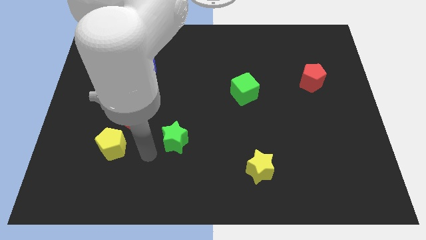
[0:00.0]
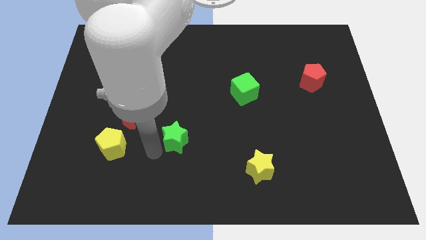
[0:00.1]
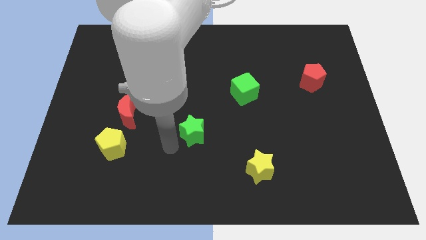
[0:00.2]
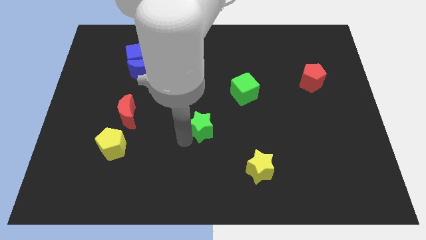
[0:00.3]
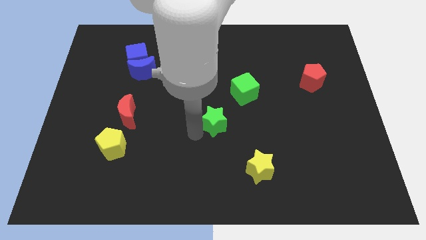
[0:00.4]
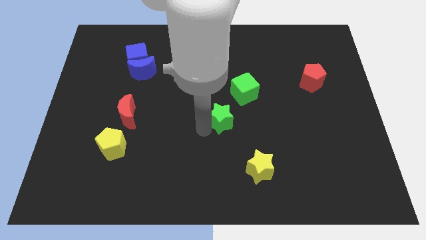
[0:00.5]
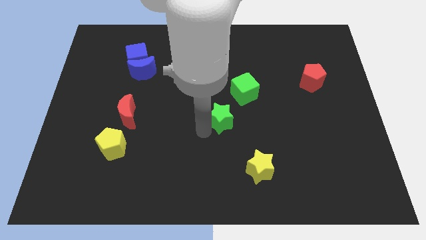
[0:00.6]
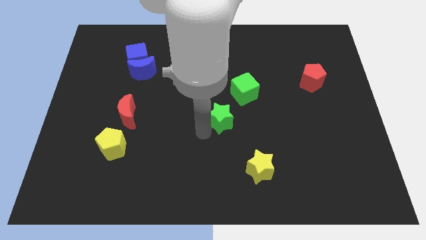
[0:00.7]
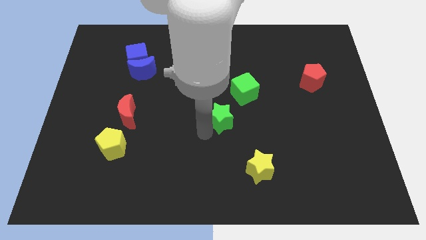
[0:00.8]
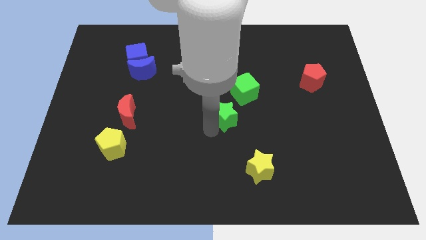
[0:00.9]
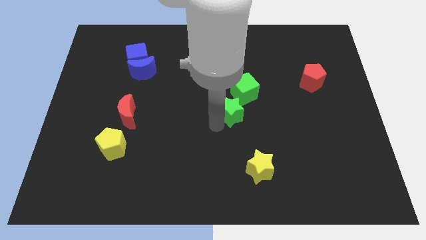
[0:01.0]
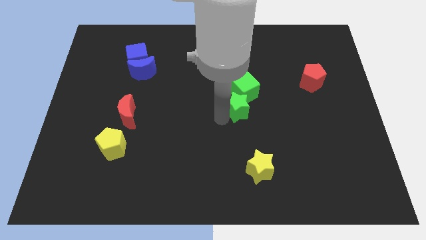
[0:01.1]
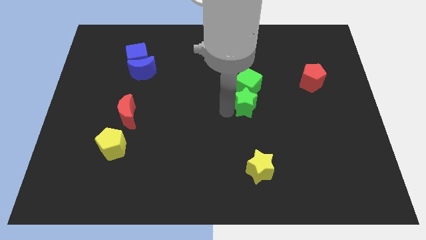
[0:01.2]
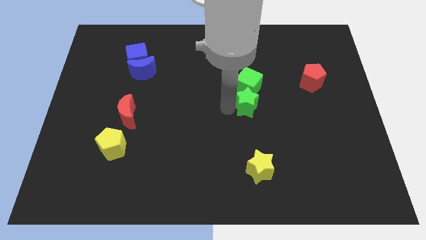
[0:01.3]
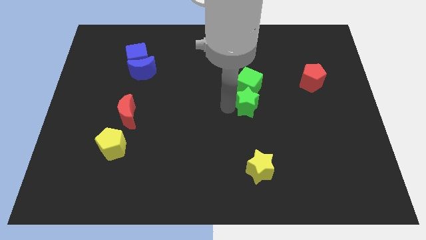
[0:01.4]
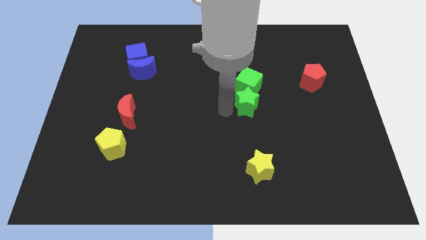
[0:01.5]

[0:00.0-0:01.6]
push the green star to the bottom of the green cube

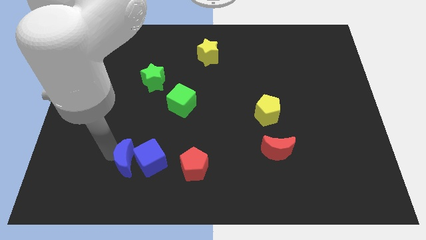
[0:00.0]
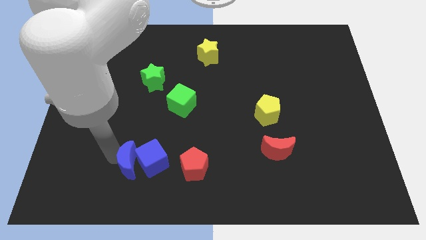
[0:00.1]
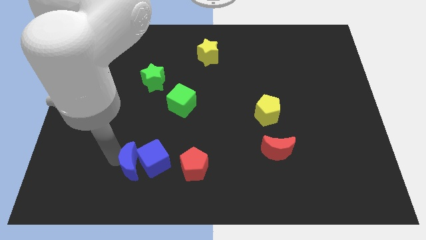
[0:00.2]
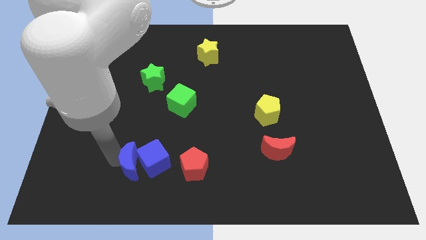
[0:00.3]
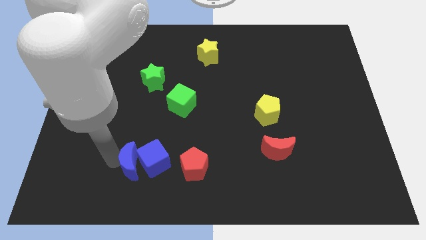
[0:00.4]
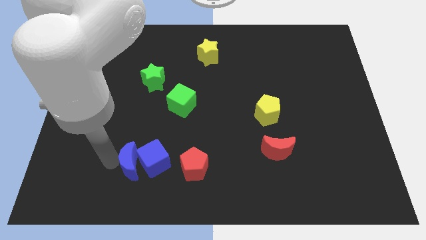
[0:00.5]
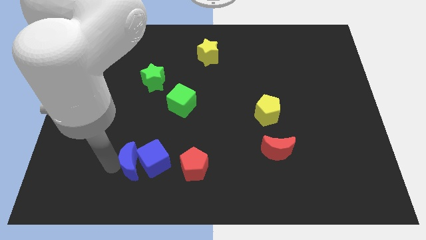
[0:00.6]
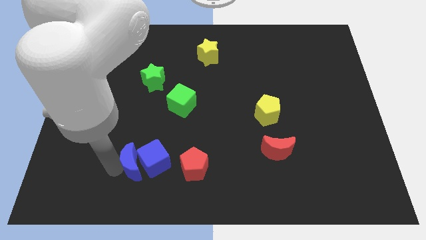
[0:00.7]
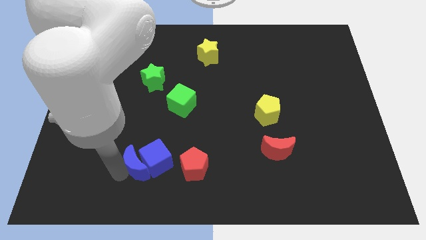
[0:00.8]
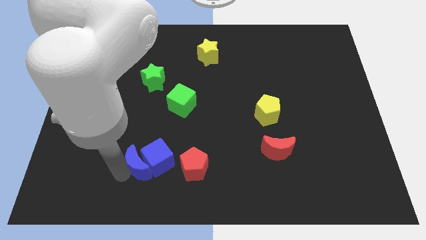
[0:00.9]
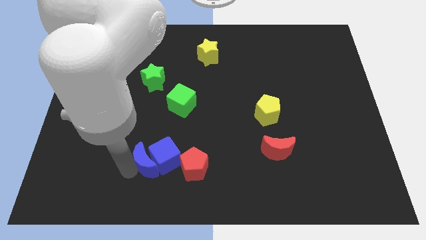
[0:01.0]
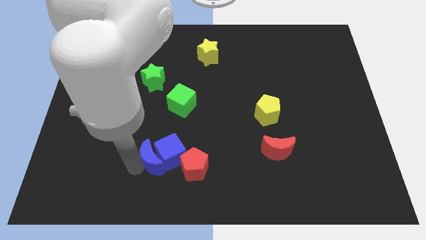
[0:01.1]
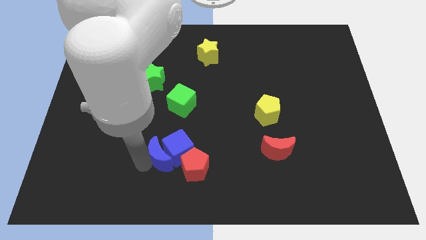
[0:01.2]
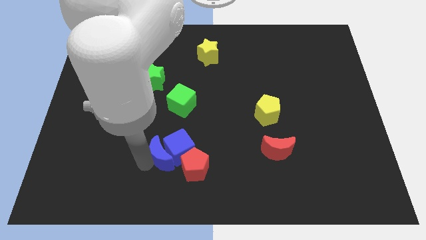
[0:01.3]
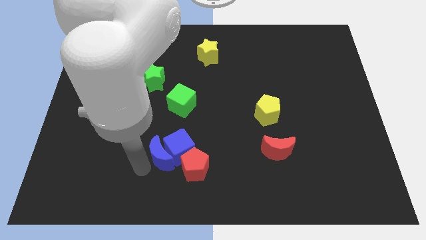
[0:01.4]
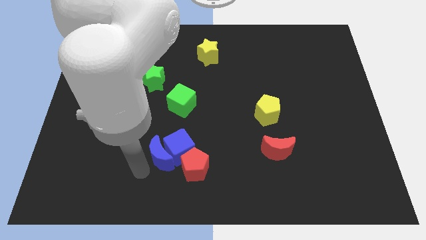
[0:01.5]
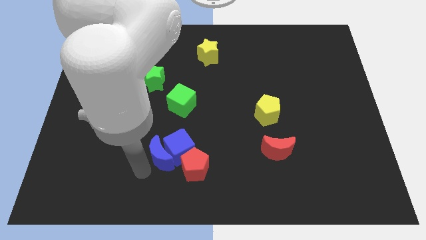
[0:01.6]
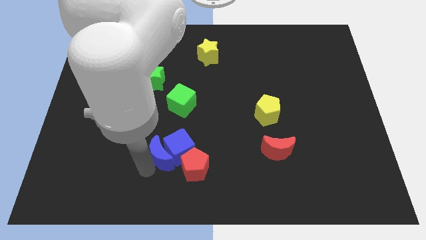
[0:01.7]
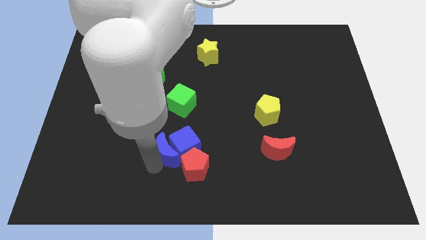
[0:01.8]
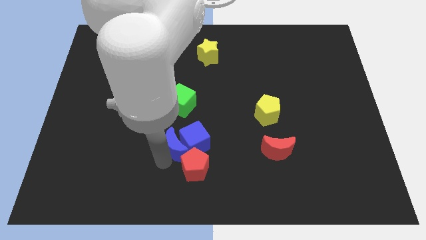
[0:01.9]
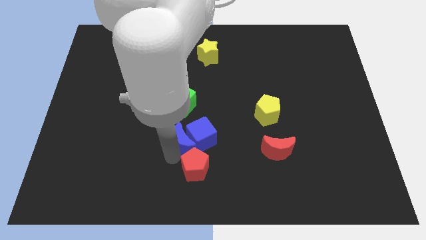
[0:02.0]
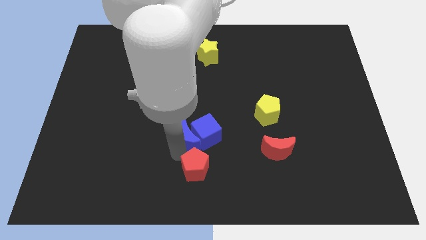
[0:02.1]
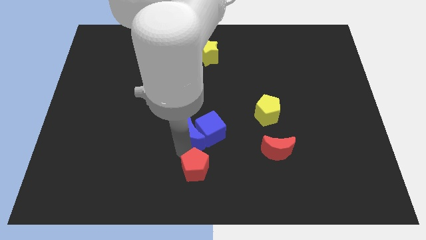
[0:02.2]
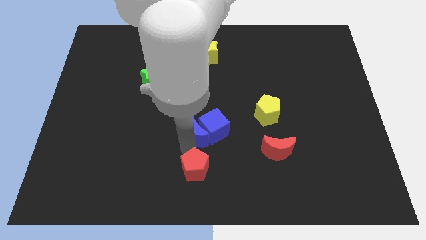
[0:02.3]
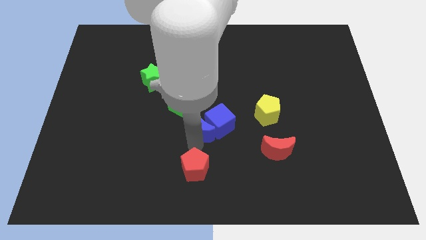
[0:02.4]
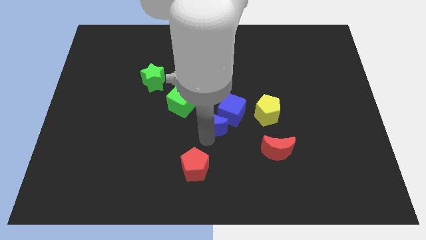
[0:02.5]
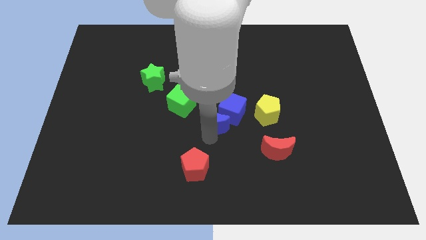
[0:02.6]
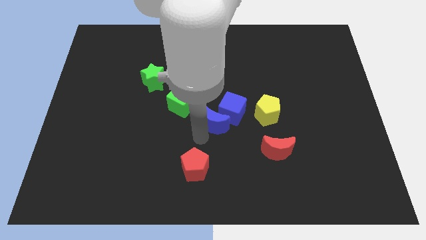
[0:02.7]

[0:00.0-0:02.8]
place the group of blue blocks between the green cube and yellow pentagon

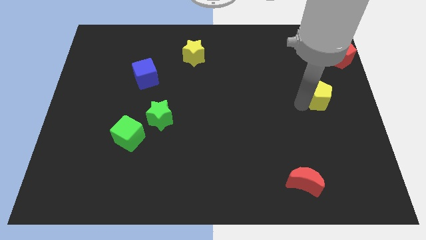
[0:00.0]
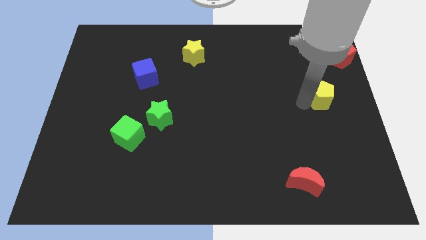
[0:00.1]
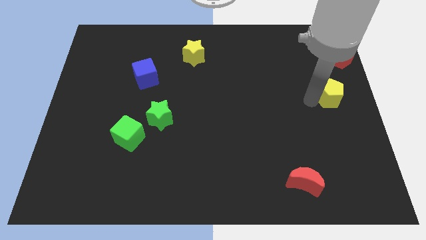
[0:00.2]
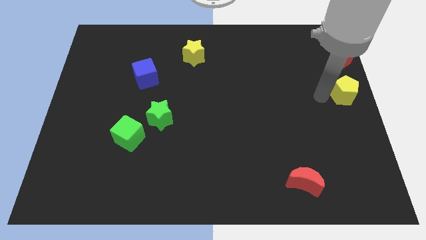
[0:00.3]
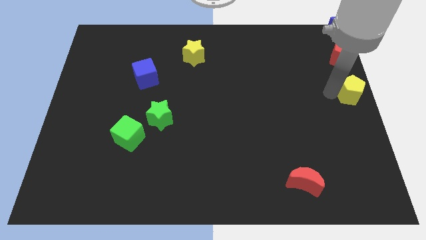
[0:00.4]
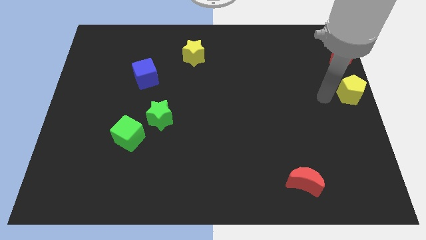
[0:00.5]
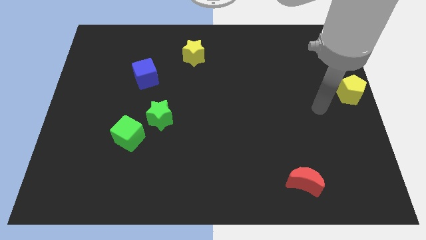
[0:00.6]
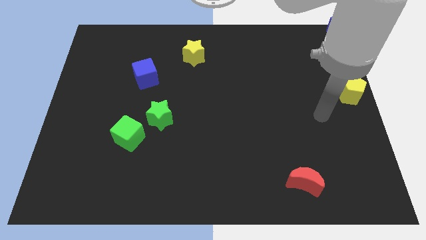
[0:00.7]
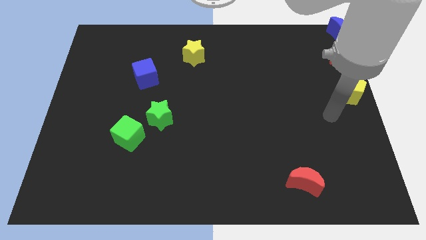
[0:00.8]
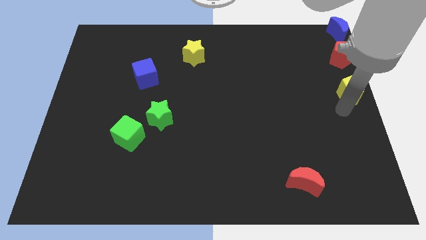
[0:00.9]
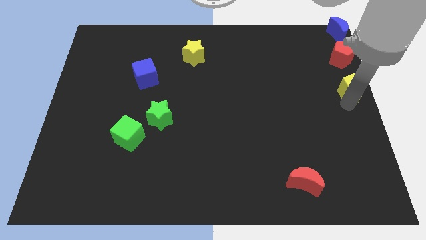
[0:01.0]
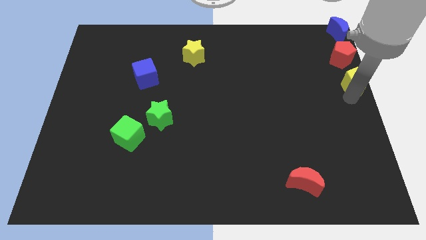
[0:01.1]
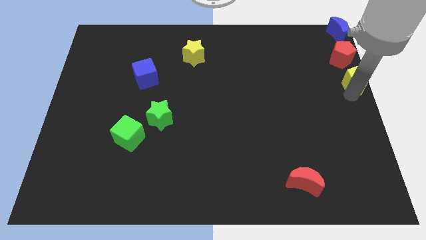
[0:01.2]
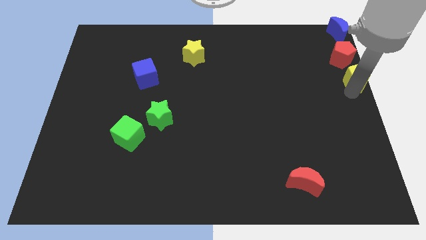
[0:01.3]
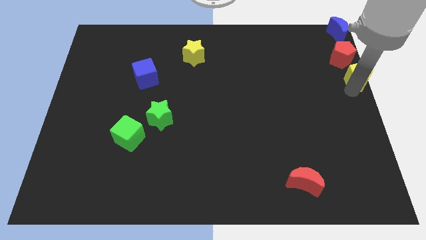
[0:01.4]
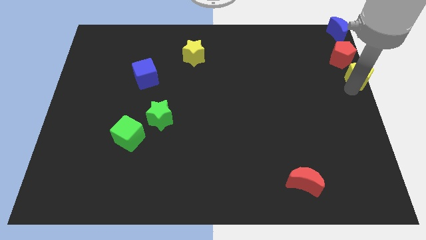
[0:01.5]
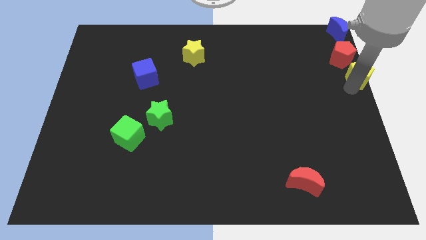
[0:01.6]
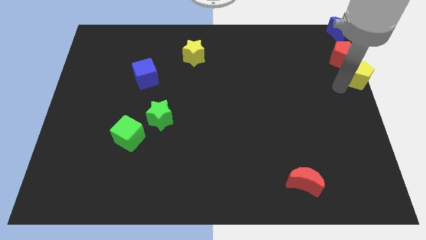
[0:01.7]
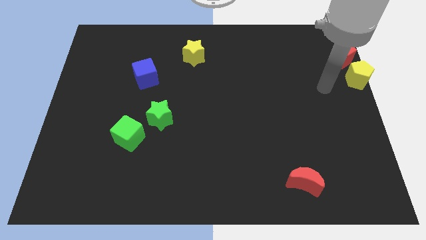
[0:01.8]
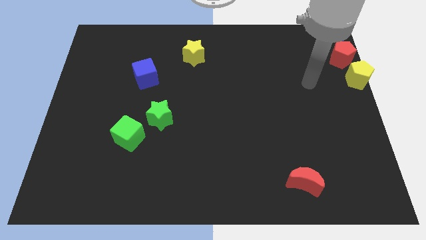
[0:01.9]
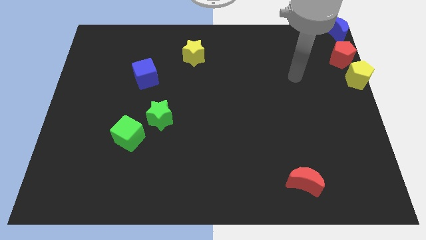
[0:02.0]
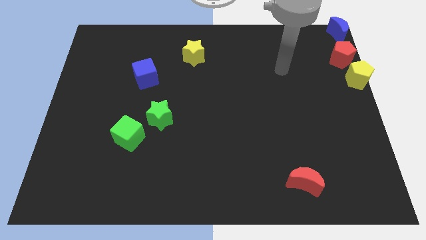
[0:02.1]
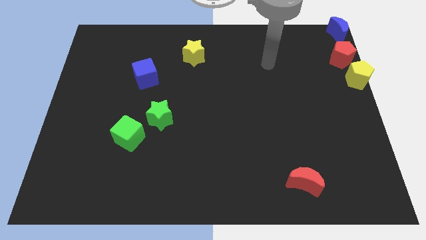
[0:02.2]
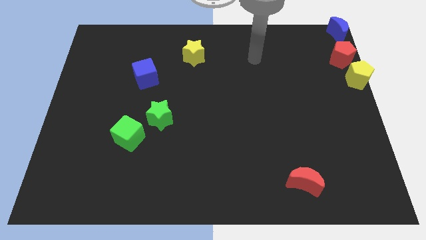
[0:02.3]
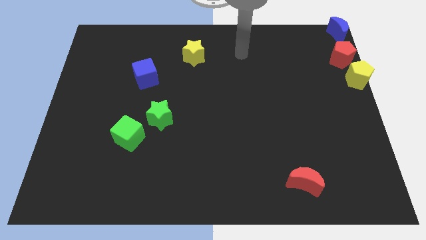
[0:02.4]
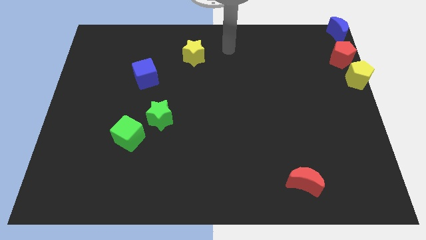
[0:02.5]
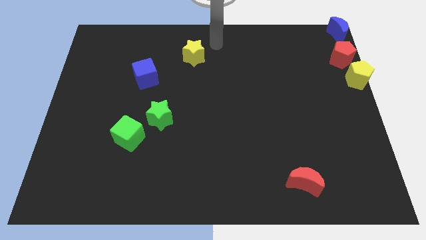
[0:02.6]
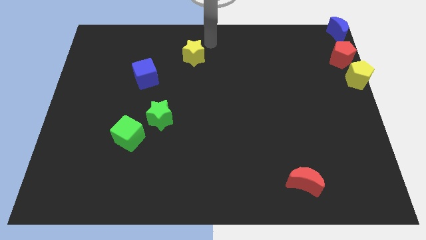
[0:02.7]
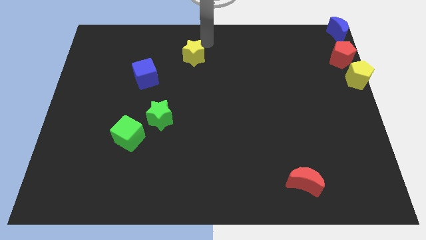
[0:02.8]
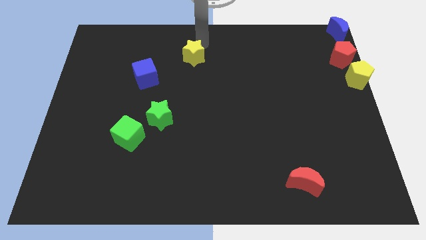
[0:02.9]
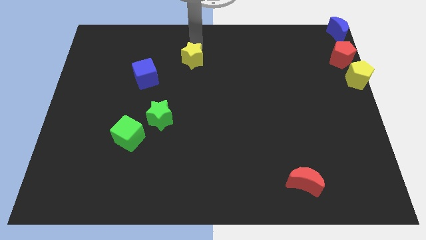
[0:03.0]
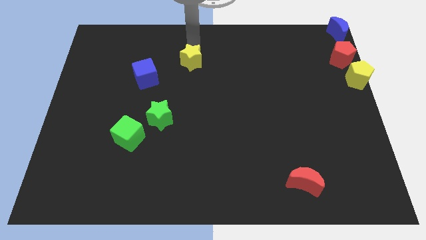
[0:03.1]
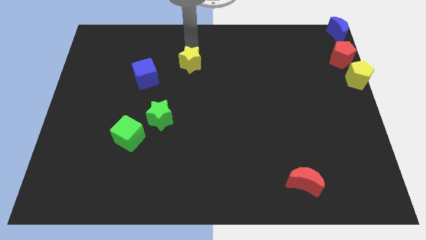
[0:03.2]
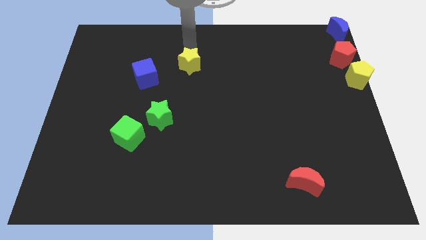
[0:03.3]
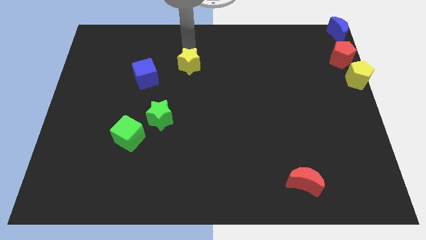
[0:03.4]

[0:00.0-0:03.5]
slide the yellow pentagon close to the red moon

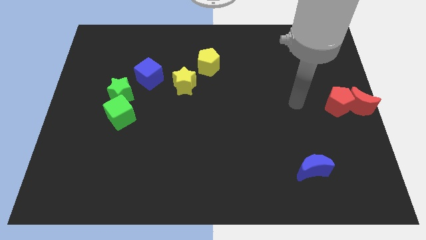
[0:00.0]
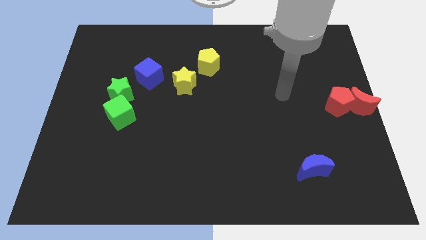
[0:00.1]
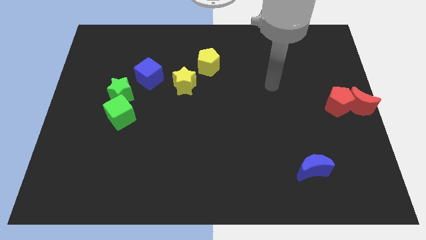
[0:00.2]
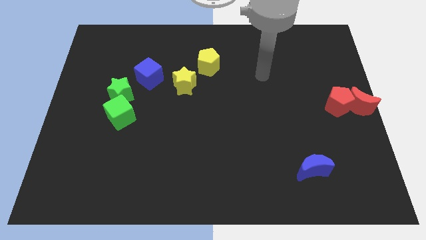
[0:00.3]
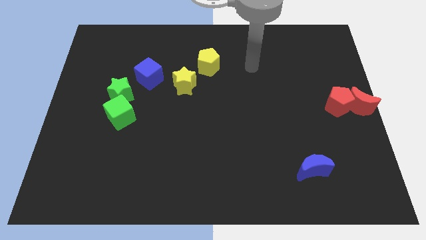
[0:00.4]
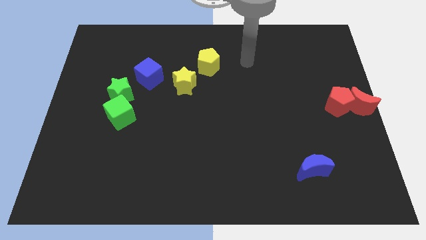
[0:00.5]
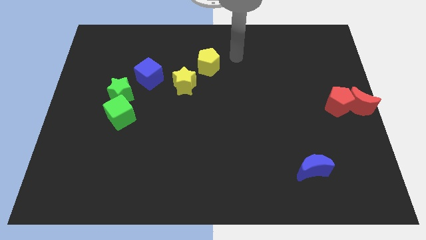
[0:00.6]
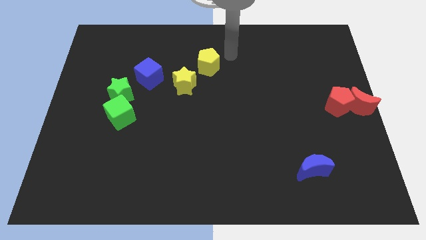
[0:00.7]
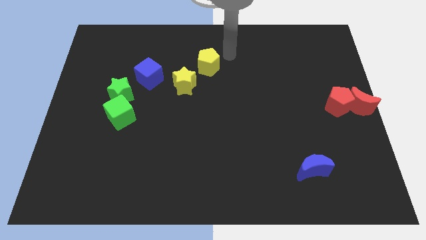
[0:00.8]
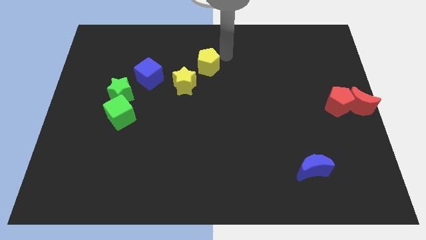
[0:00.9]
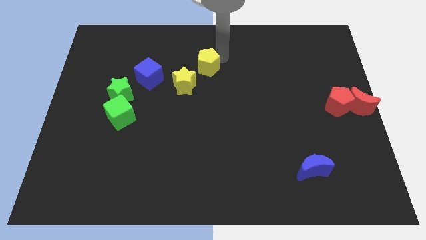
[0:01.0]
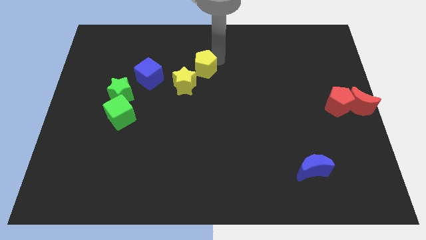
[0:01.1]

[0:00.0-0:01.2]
move the arm into the yellow pentagon
